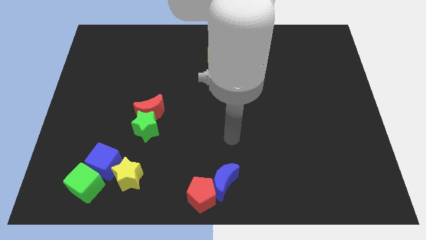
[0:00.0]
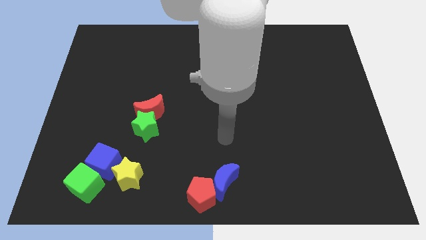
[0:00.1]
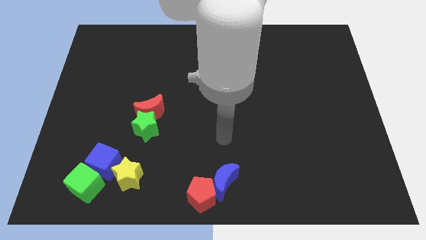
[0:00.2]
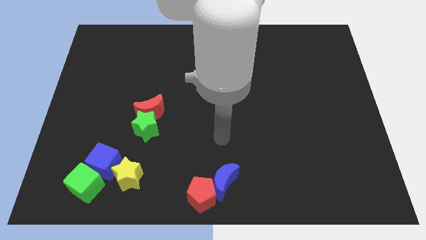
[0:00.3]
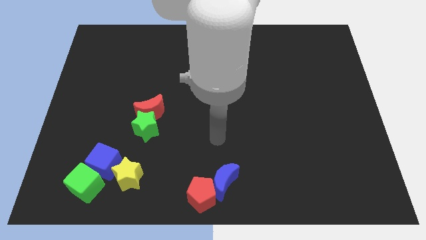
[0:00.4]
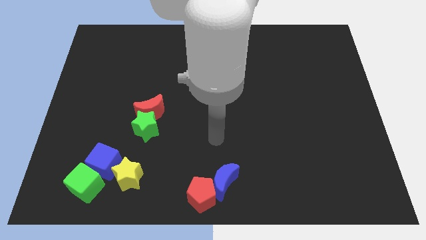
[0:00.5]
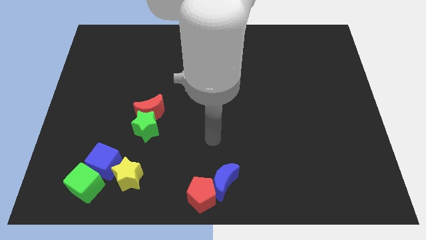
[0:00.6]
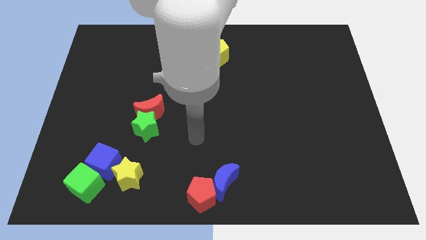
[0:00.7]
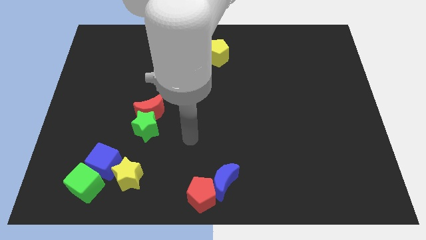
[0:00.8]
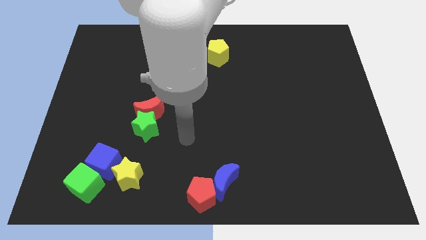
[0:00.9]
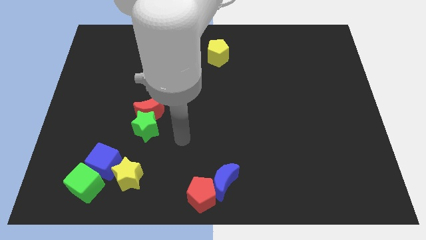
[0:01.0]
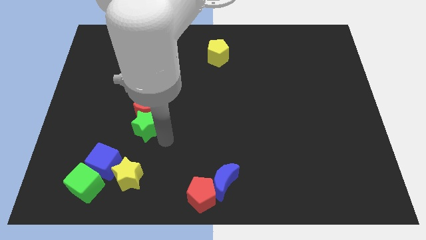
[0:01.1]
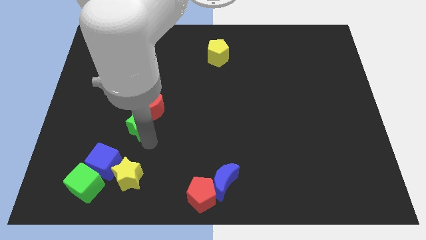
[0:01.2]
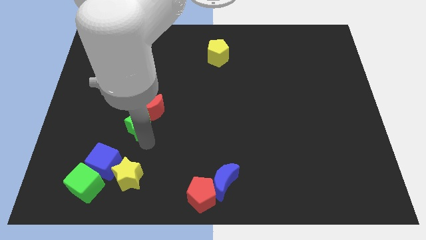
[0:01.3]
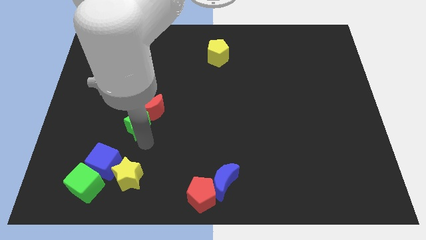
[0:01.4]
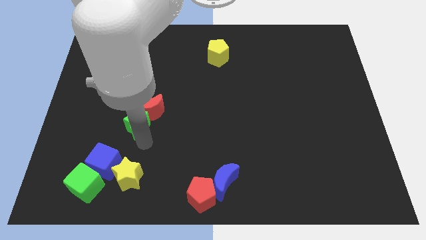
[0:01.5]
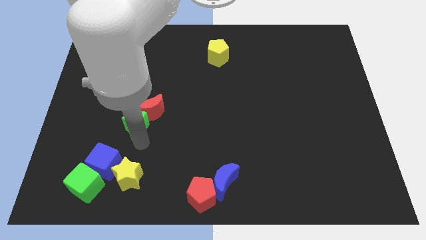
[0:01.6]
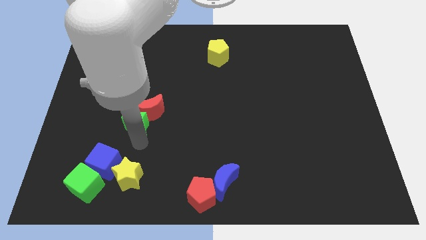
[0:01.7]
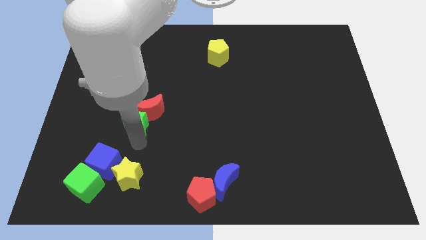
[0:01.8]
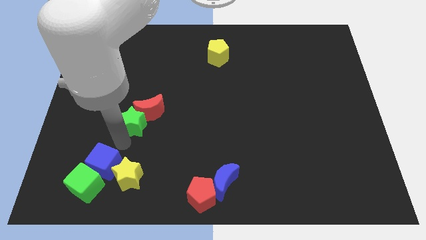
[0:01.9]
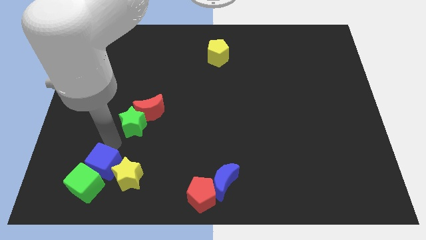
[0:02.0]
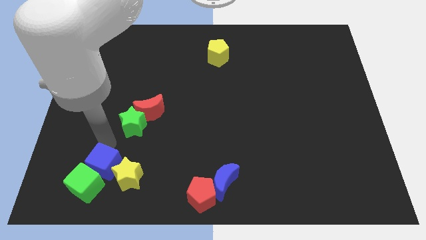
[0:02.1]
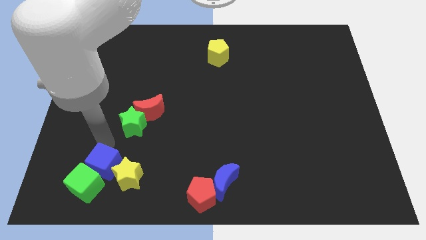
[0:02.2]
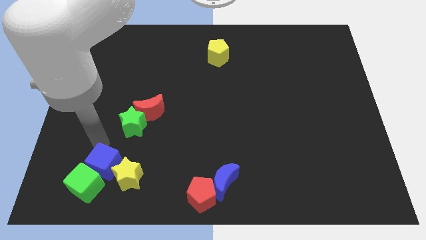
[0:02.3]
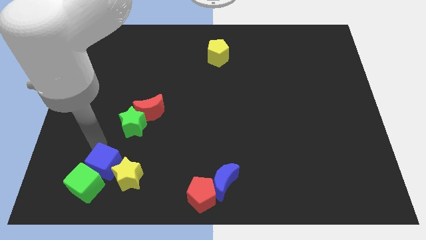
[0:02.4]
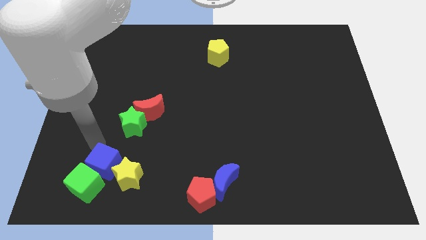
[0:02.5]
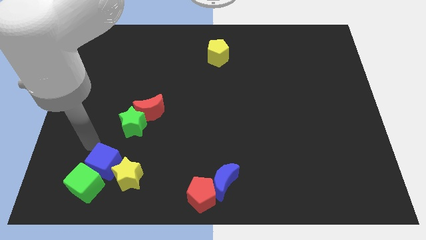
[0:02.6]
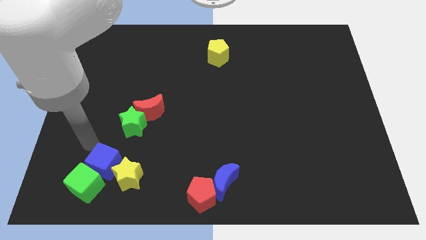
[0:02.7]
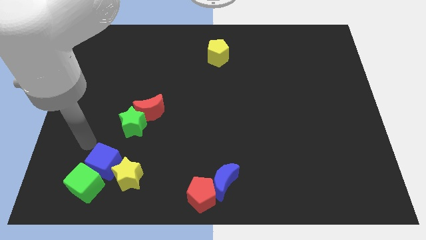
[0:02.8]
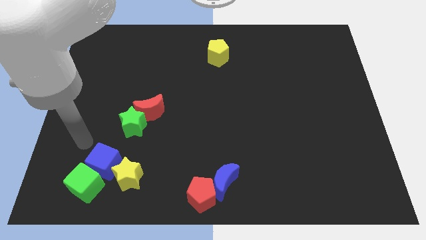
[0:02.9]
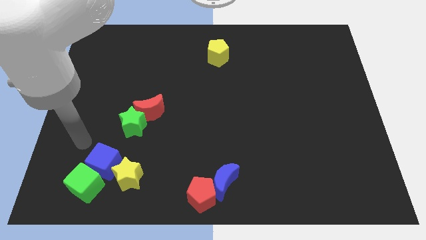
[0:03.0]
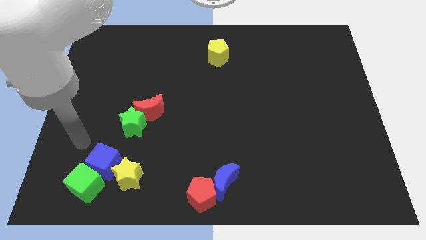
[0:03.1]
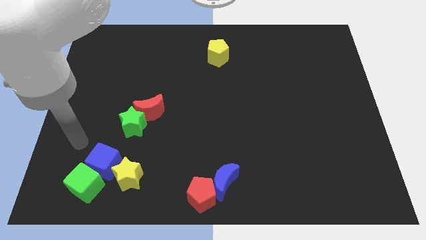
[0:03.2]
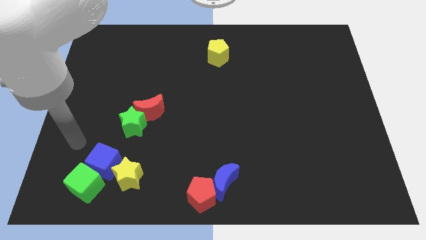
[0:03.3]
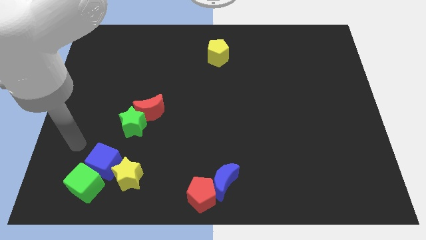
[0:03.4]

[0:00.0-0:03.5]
tap the green star

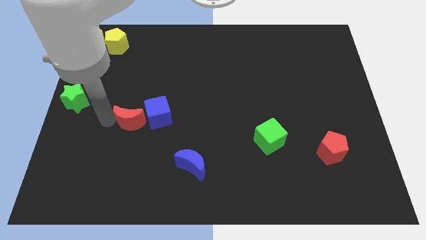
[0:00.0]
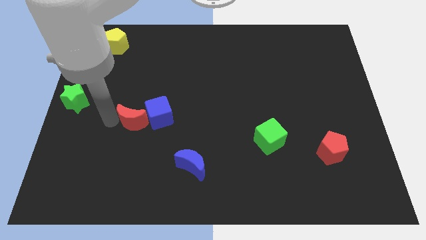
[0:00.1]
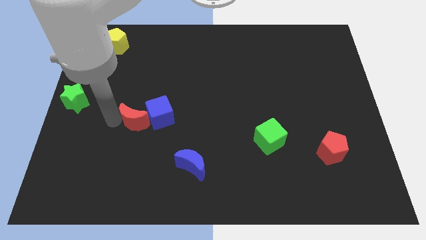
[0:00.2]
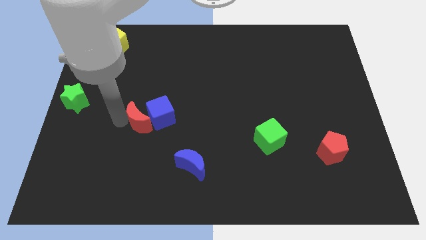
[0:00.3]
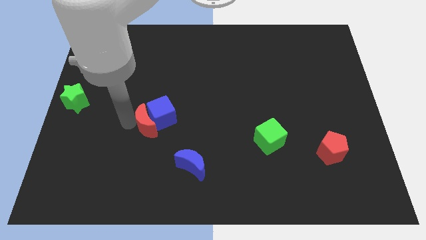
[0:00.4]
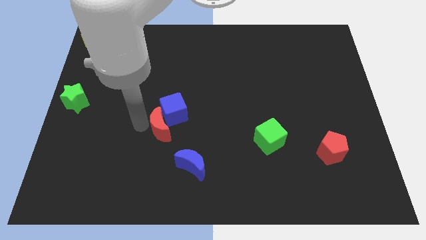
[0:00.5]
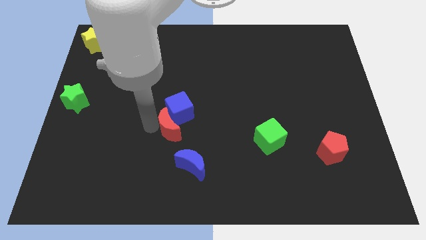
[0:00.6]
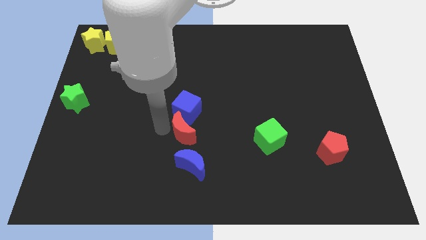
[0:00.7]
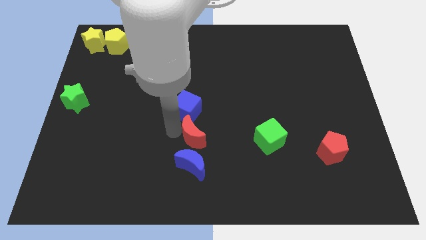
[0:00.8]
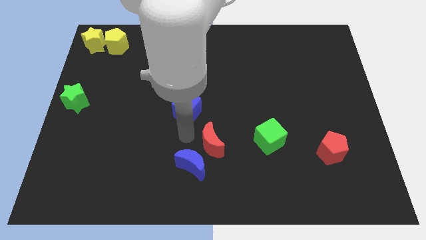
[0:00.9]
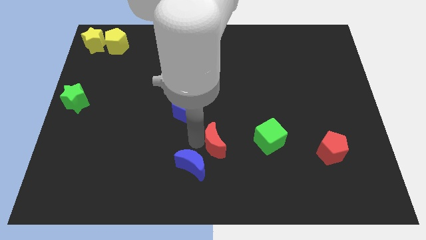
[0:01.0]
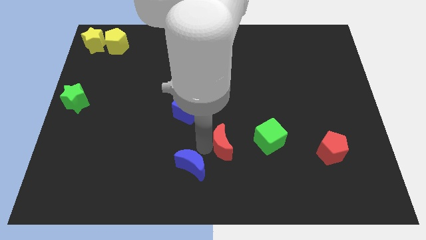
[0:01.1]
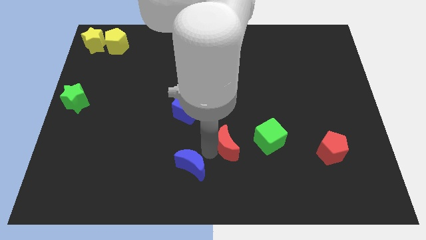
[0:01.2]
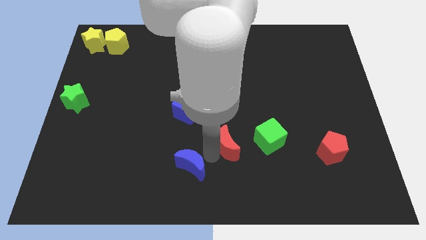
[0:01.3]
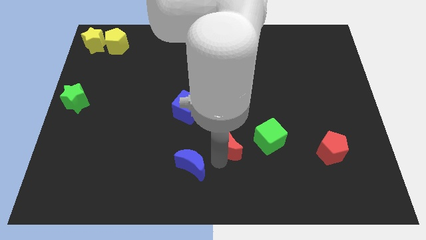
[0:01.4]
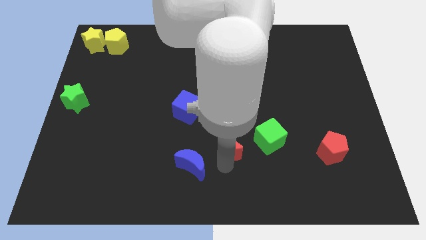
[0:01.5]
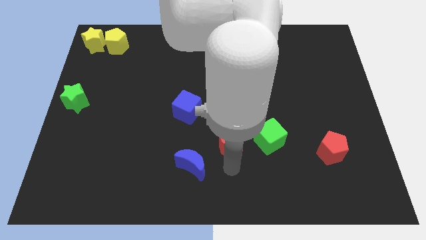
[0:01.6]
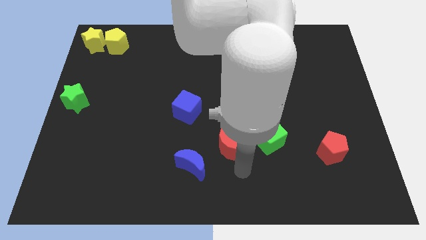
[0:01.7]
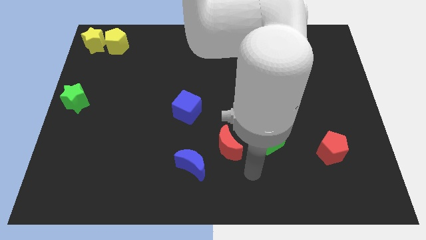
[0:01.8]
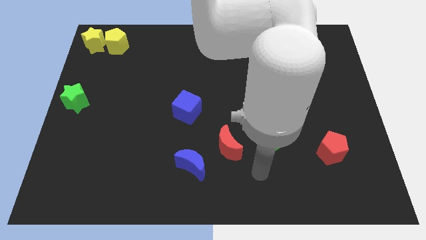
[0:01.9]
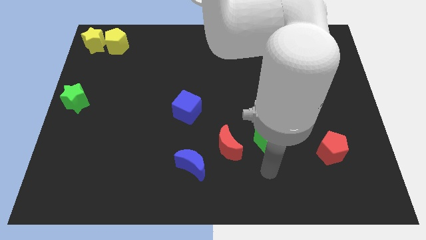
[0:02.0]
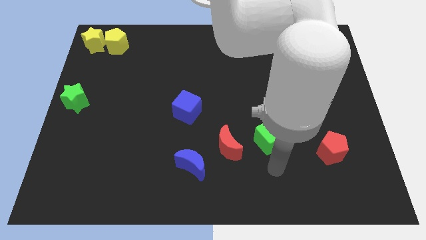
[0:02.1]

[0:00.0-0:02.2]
move the red crescent to the left of green cube

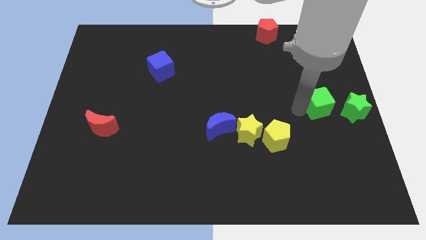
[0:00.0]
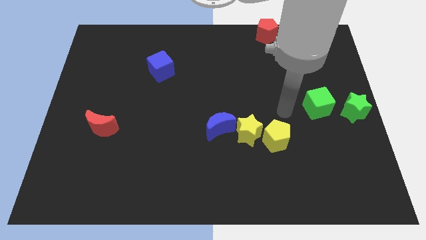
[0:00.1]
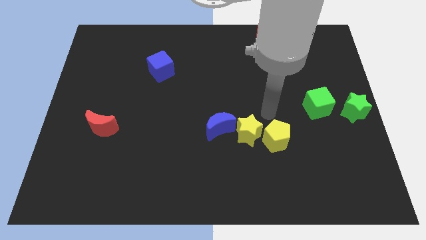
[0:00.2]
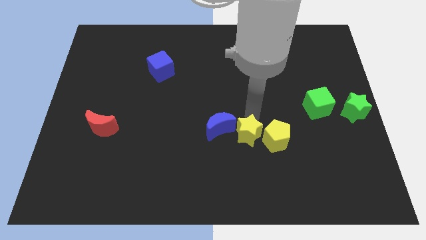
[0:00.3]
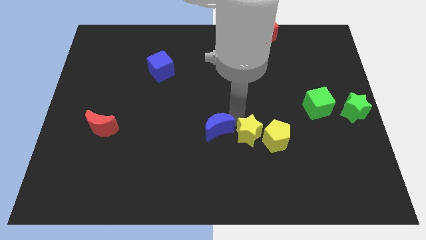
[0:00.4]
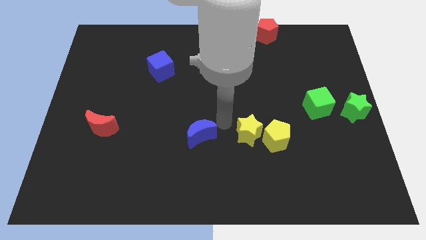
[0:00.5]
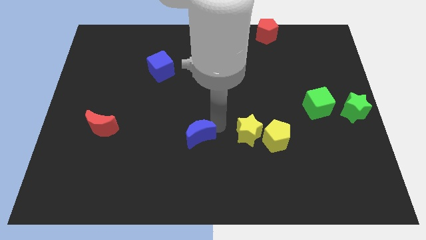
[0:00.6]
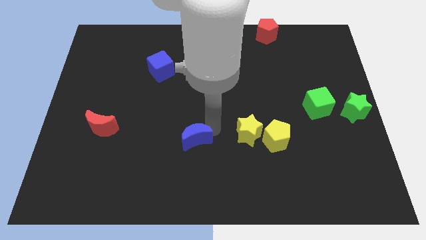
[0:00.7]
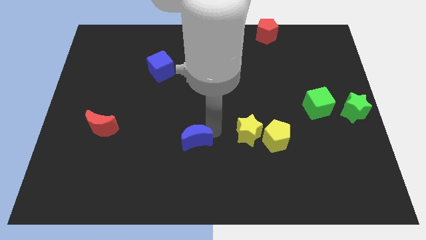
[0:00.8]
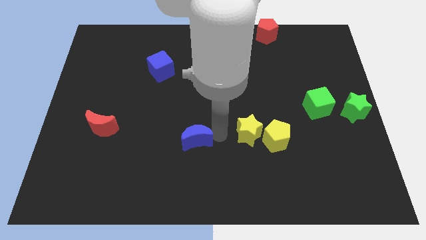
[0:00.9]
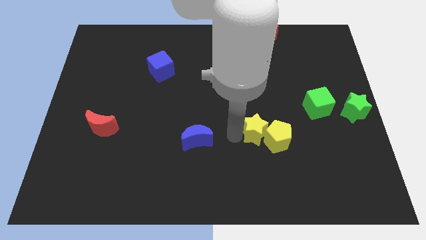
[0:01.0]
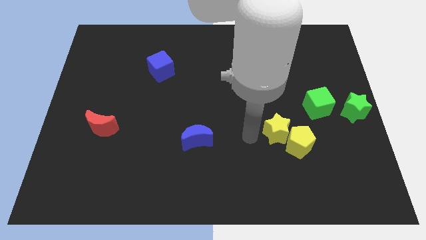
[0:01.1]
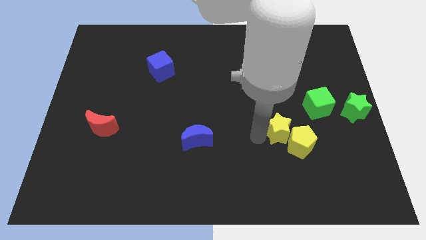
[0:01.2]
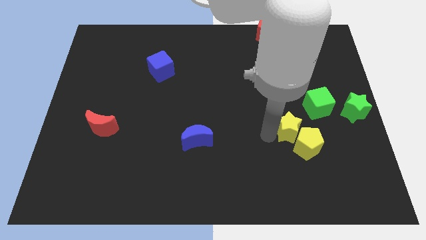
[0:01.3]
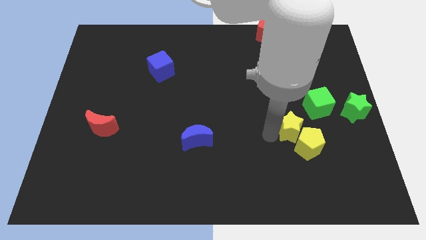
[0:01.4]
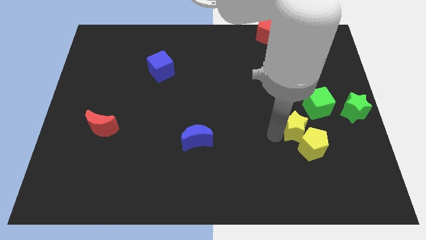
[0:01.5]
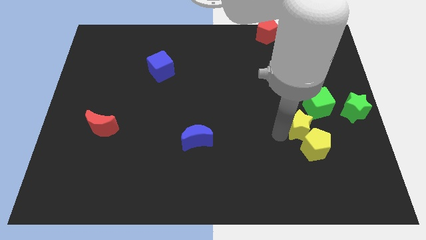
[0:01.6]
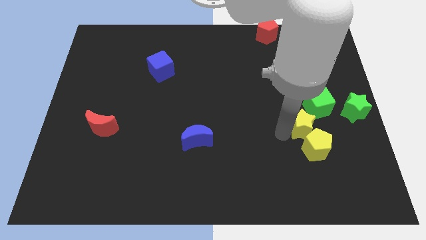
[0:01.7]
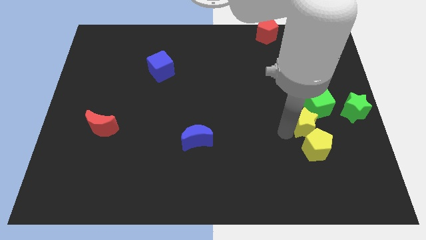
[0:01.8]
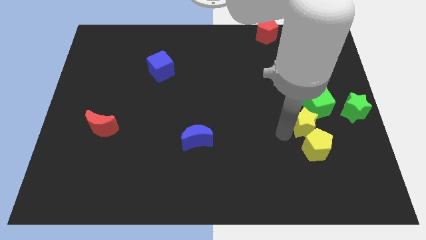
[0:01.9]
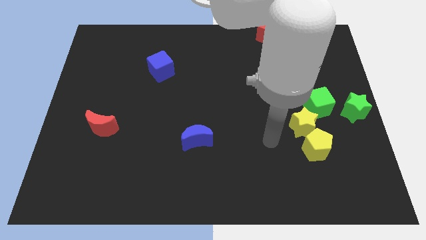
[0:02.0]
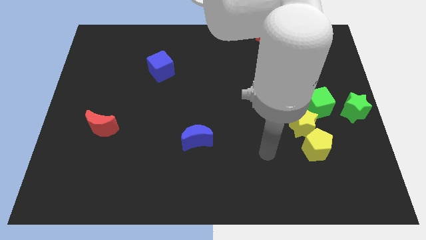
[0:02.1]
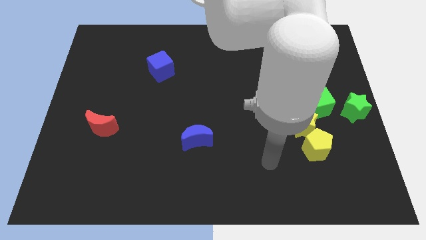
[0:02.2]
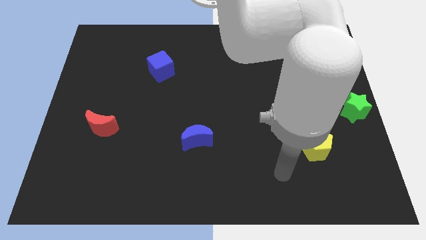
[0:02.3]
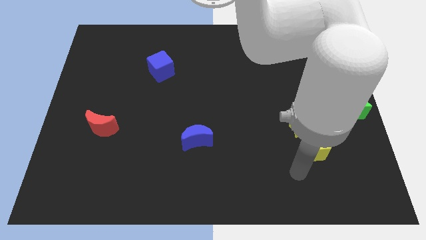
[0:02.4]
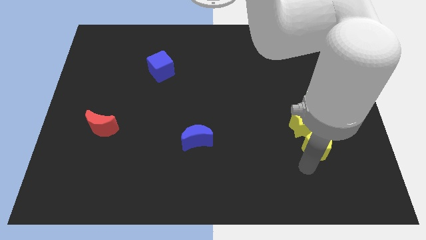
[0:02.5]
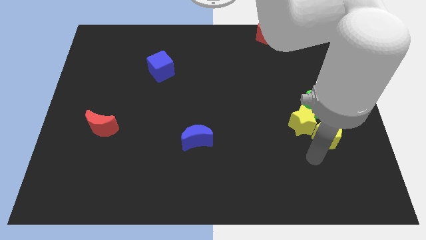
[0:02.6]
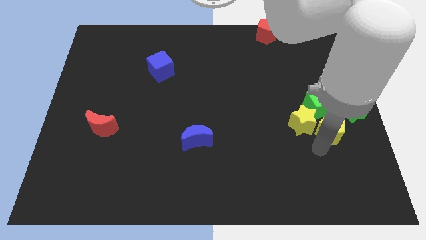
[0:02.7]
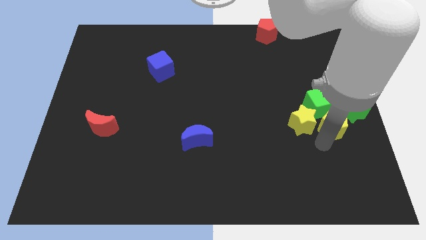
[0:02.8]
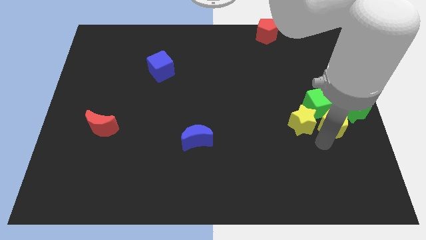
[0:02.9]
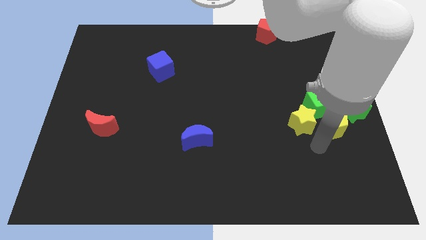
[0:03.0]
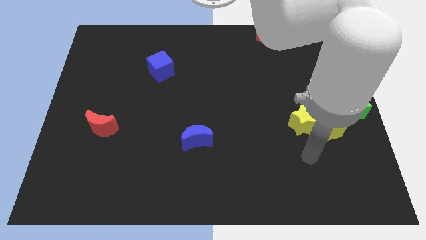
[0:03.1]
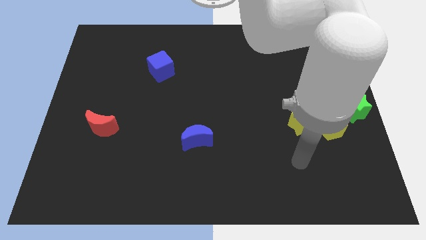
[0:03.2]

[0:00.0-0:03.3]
push the yellow blocks towards green blocks
